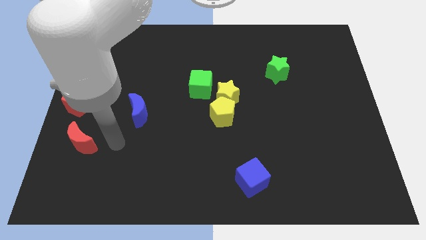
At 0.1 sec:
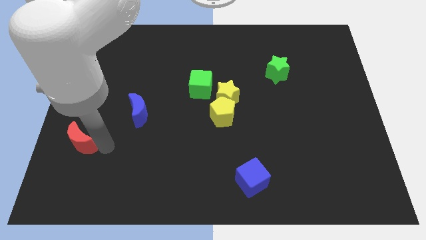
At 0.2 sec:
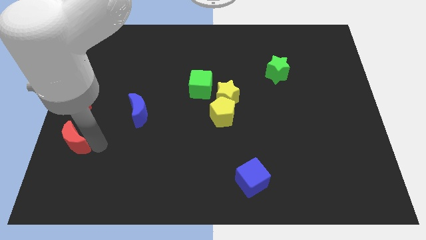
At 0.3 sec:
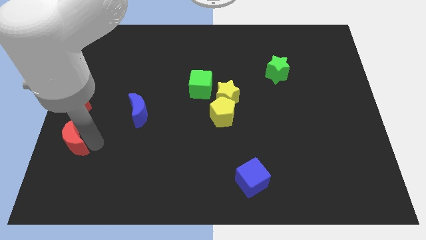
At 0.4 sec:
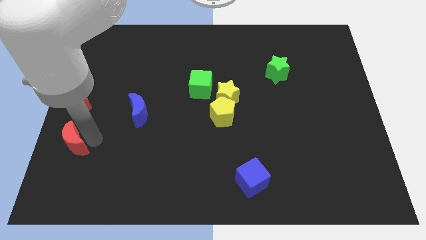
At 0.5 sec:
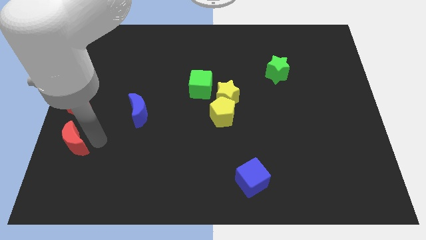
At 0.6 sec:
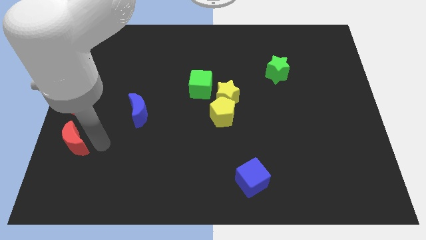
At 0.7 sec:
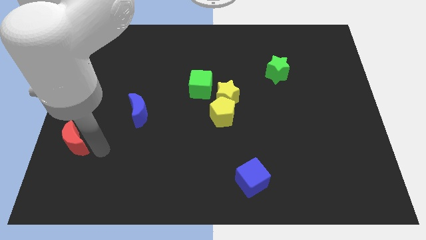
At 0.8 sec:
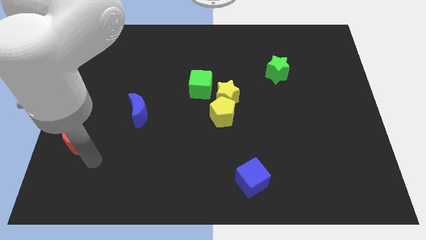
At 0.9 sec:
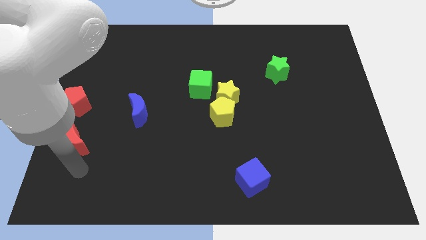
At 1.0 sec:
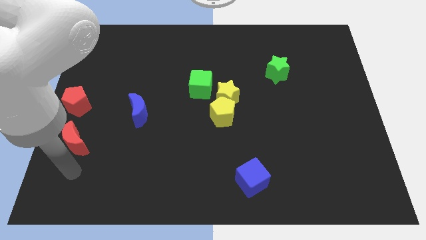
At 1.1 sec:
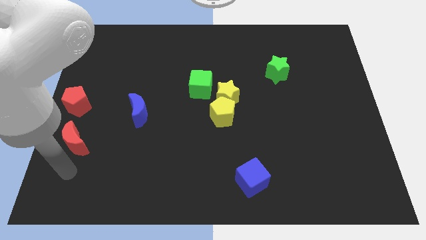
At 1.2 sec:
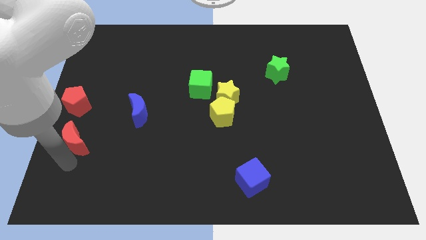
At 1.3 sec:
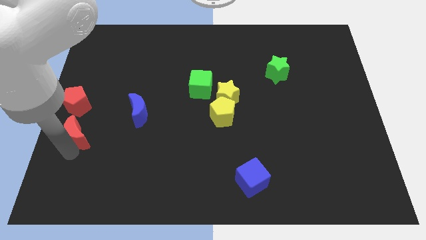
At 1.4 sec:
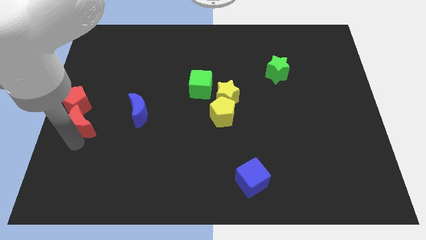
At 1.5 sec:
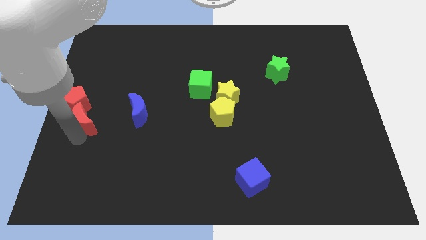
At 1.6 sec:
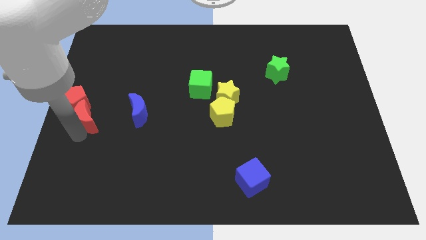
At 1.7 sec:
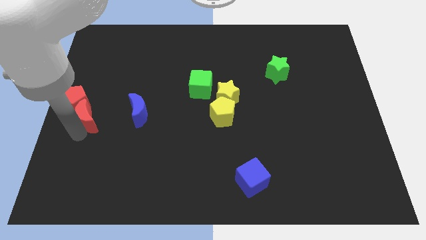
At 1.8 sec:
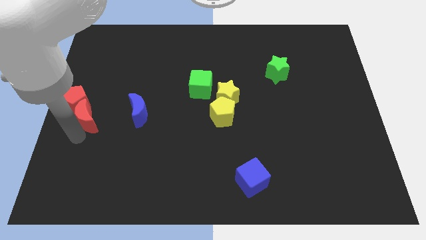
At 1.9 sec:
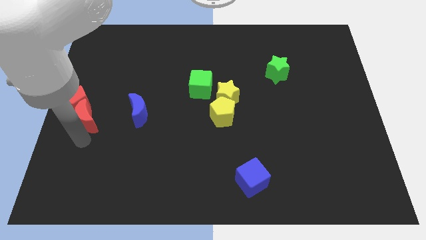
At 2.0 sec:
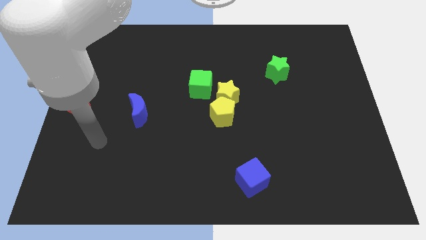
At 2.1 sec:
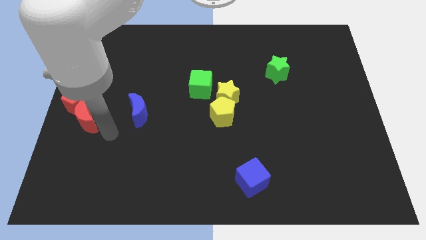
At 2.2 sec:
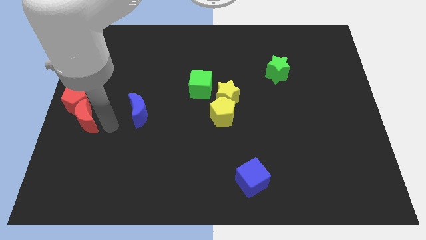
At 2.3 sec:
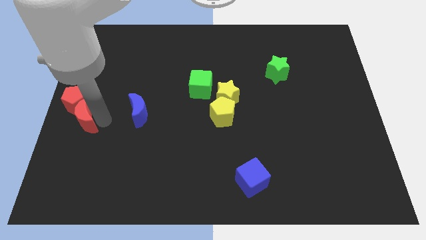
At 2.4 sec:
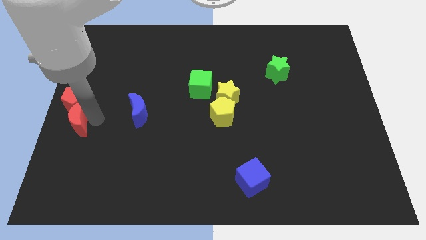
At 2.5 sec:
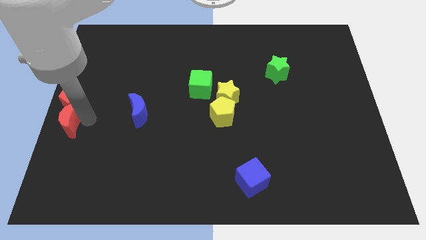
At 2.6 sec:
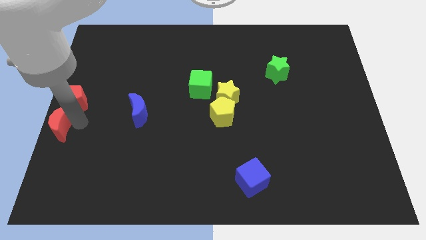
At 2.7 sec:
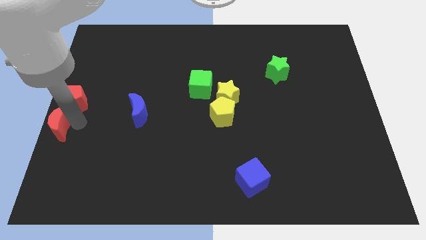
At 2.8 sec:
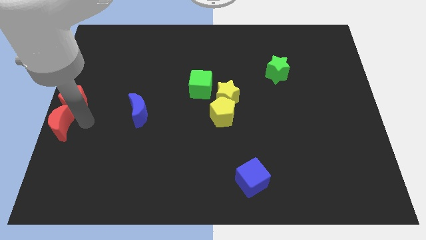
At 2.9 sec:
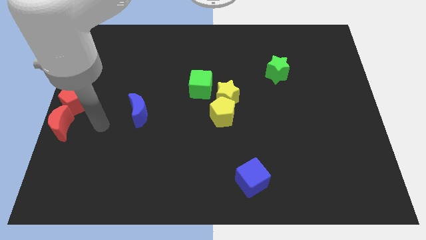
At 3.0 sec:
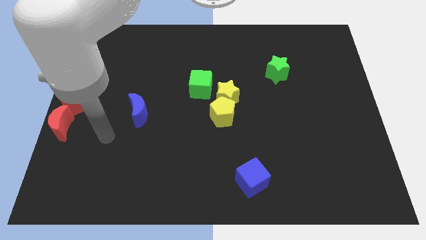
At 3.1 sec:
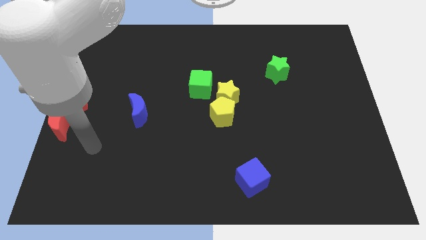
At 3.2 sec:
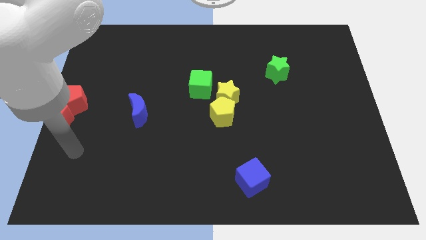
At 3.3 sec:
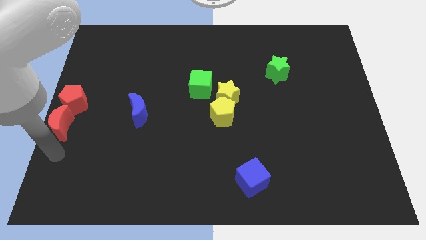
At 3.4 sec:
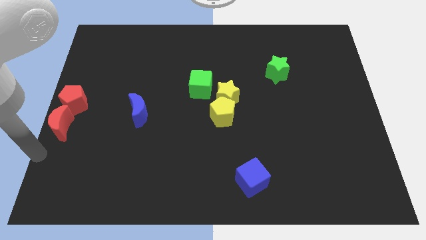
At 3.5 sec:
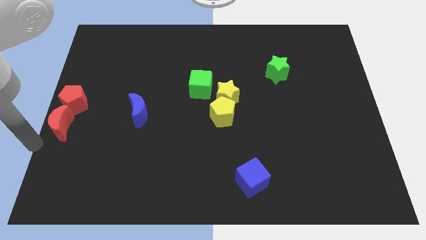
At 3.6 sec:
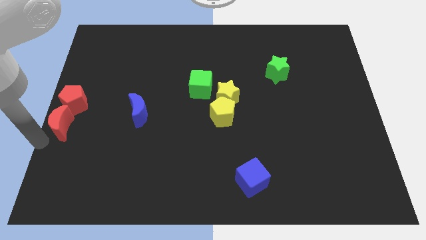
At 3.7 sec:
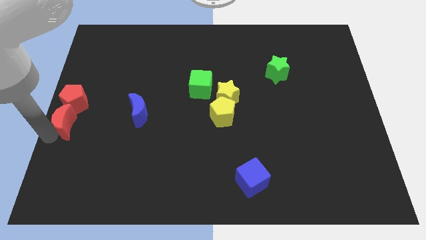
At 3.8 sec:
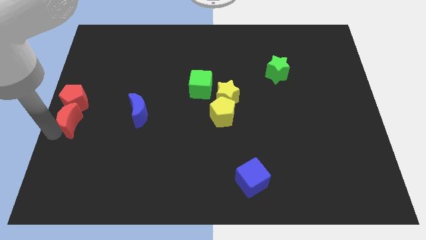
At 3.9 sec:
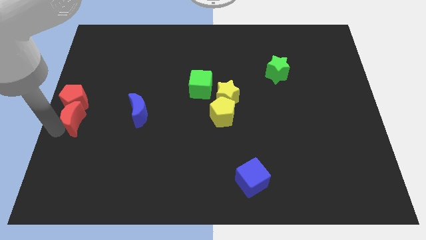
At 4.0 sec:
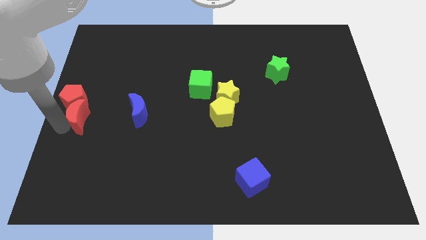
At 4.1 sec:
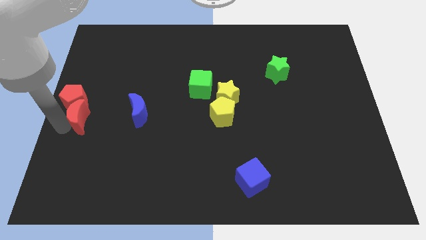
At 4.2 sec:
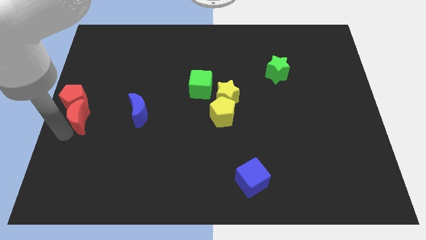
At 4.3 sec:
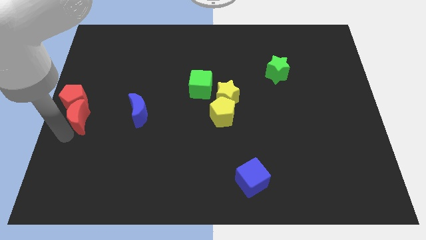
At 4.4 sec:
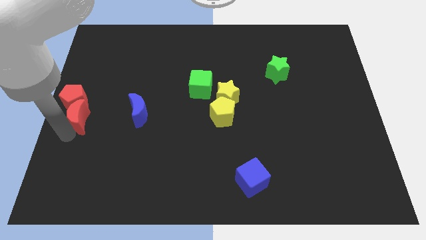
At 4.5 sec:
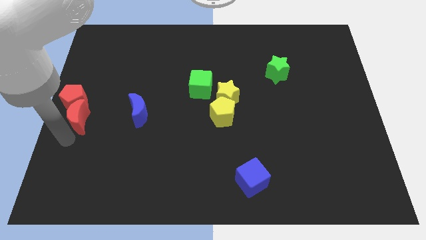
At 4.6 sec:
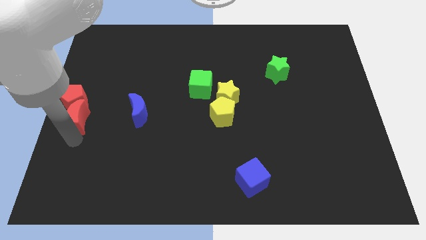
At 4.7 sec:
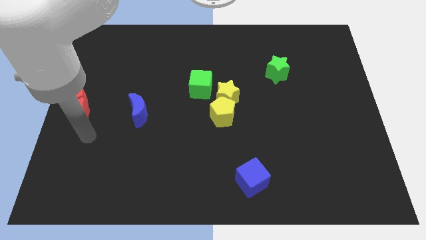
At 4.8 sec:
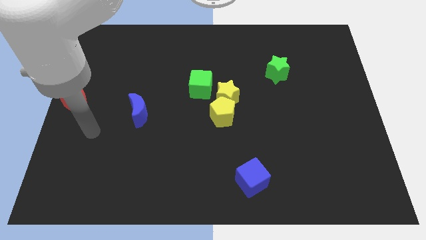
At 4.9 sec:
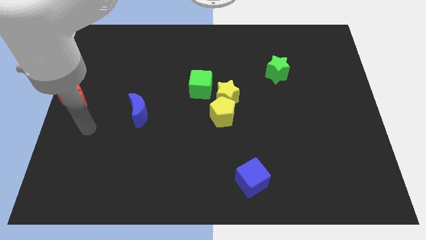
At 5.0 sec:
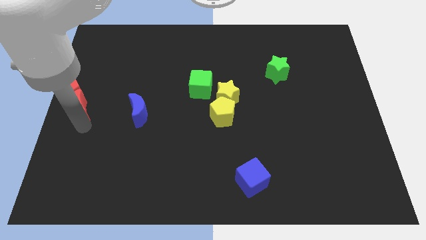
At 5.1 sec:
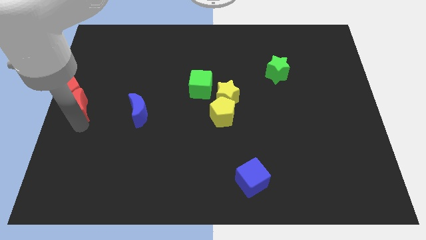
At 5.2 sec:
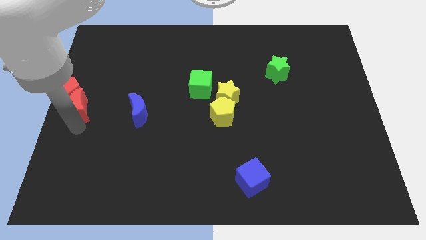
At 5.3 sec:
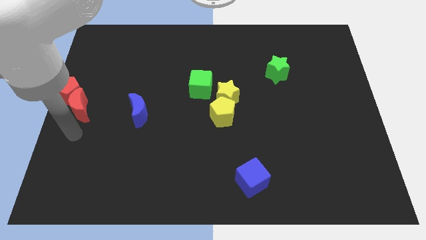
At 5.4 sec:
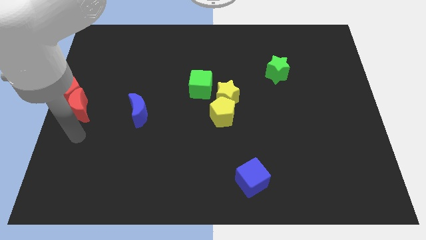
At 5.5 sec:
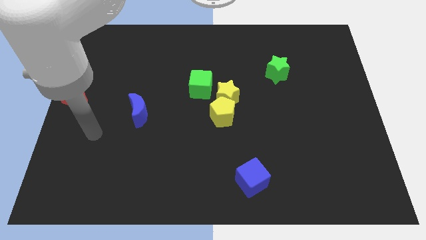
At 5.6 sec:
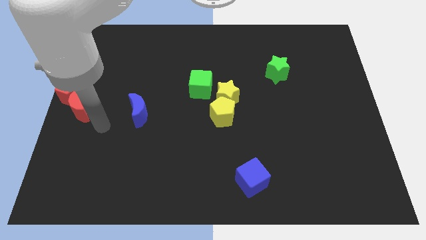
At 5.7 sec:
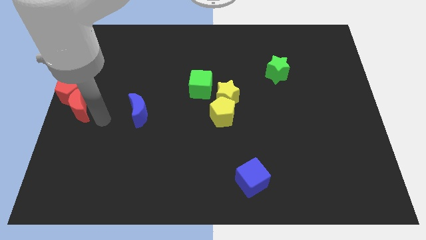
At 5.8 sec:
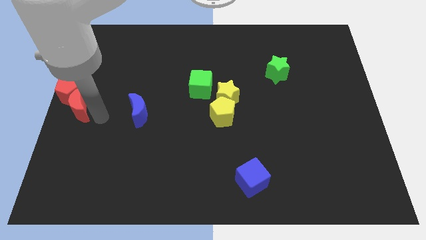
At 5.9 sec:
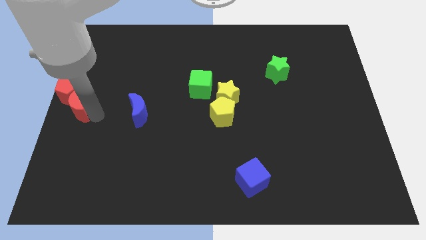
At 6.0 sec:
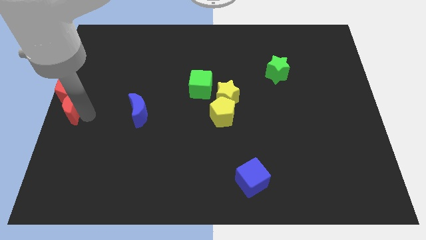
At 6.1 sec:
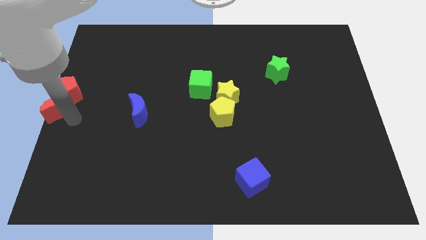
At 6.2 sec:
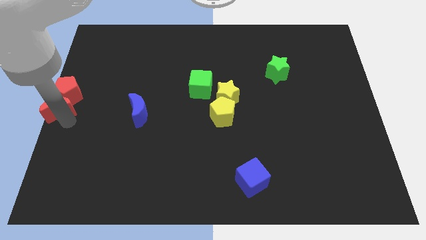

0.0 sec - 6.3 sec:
group up the red blocks at the center left of the board

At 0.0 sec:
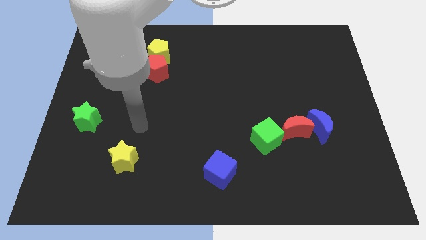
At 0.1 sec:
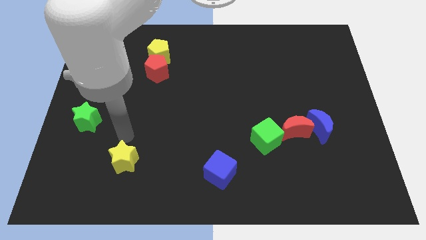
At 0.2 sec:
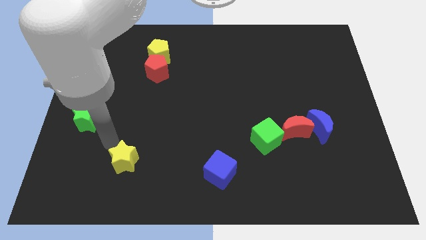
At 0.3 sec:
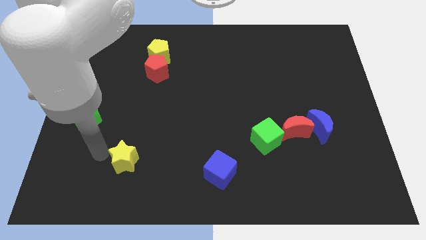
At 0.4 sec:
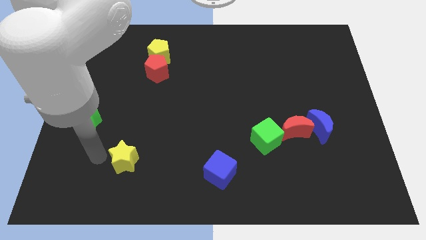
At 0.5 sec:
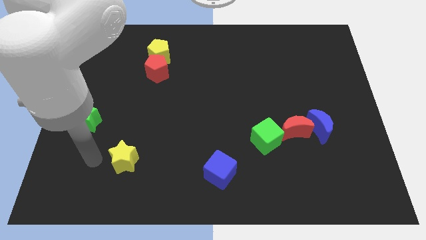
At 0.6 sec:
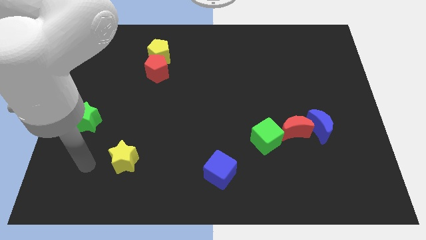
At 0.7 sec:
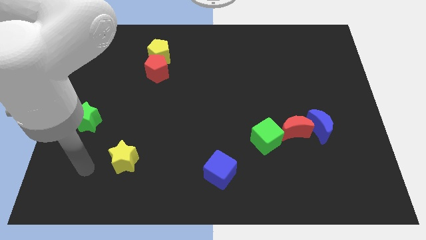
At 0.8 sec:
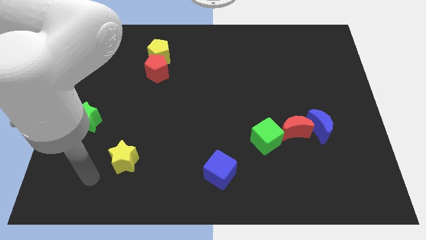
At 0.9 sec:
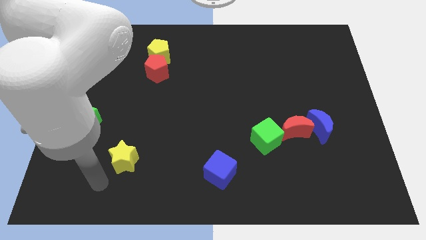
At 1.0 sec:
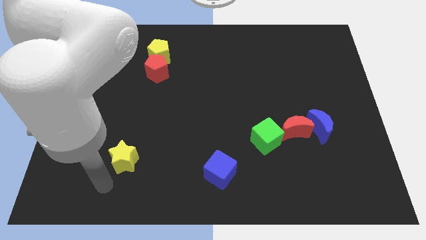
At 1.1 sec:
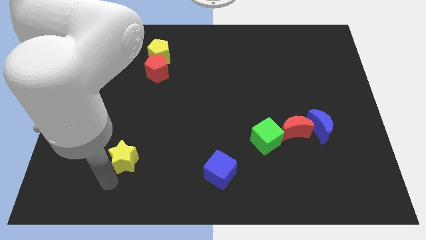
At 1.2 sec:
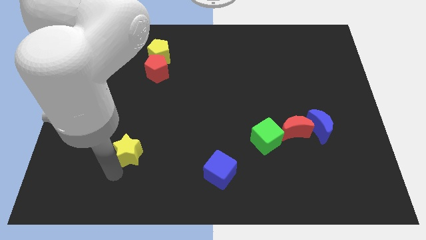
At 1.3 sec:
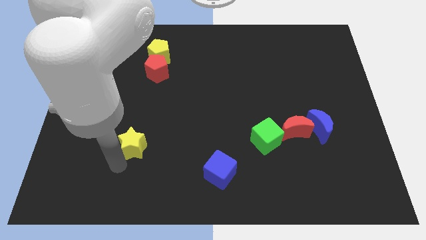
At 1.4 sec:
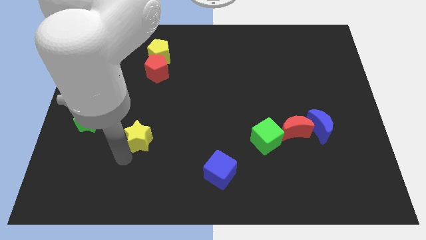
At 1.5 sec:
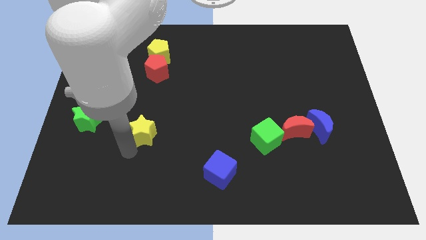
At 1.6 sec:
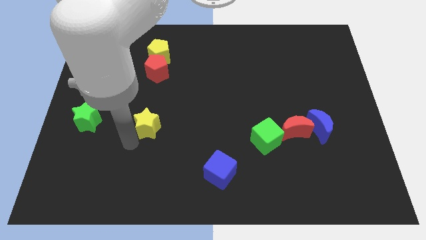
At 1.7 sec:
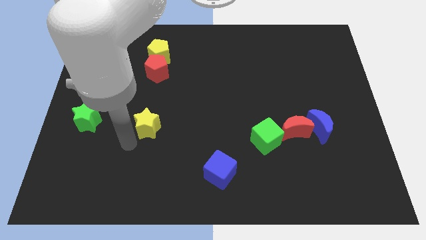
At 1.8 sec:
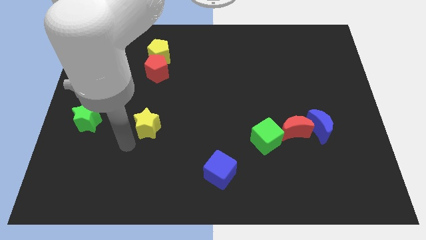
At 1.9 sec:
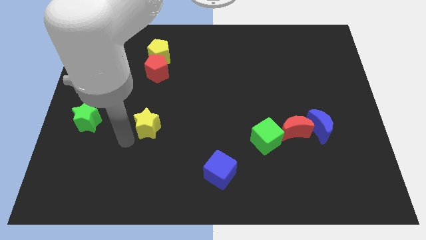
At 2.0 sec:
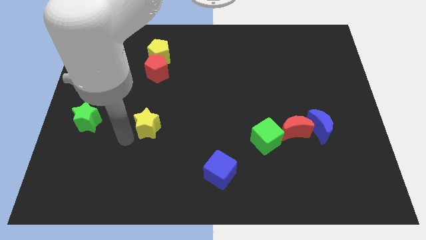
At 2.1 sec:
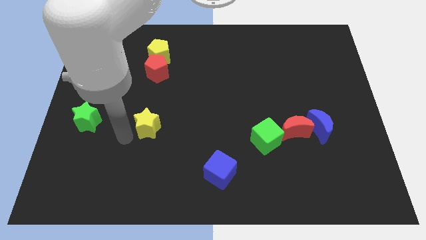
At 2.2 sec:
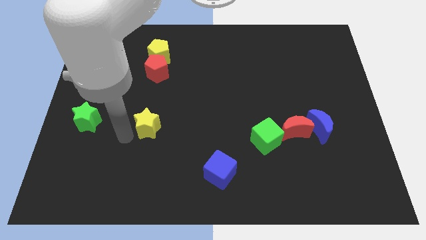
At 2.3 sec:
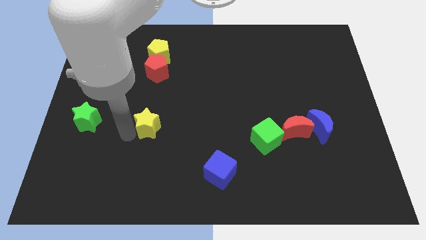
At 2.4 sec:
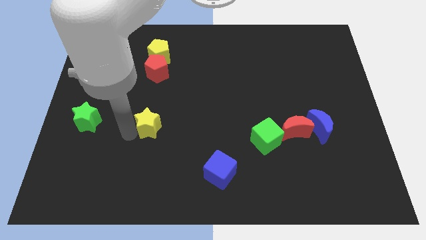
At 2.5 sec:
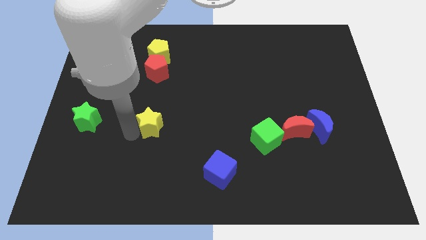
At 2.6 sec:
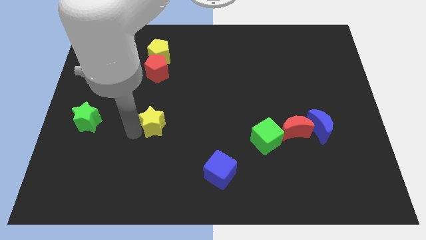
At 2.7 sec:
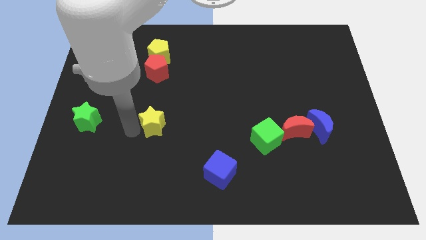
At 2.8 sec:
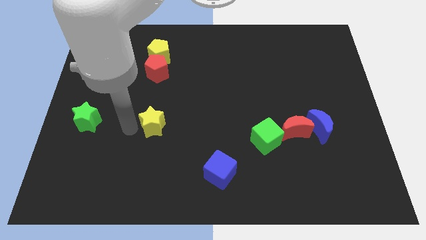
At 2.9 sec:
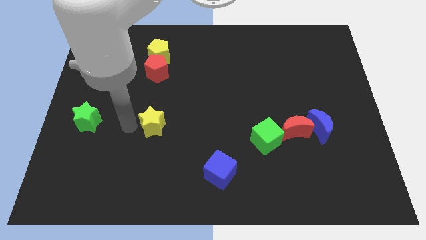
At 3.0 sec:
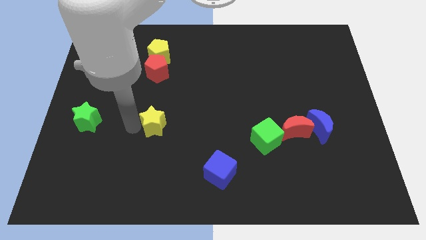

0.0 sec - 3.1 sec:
push the yellow star to the horizontal right of the green star
